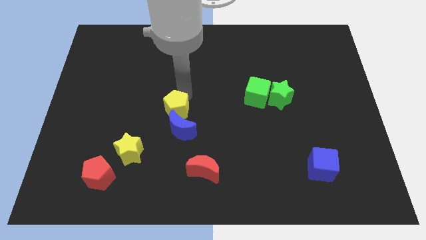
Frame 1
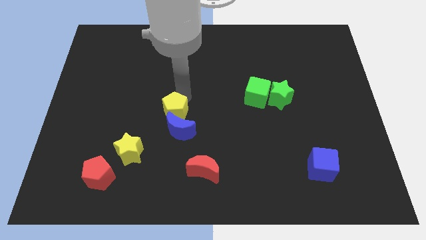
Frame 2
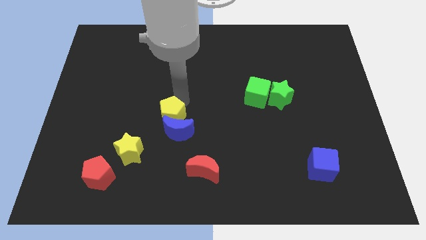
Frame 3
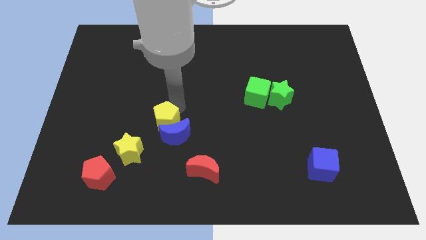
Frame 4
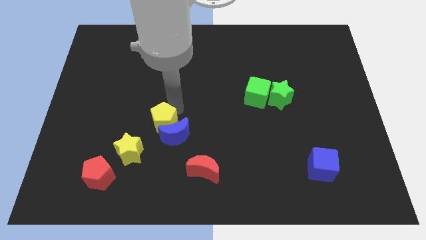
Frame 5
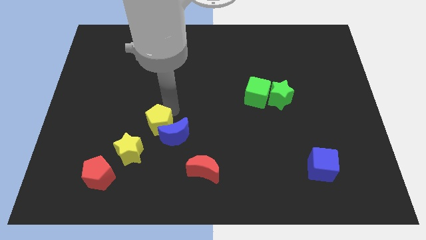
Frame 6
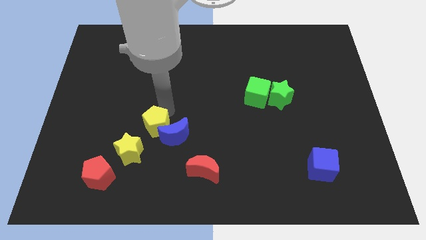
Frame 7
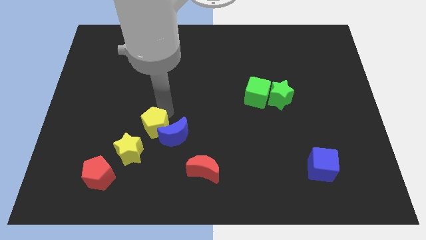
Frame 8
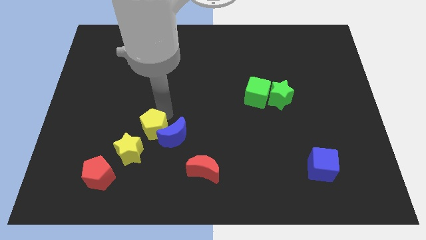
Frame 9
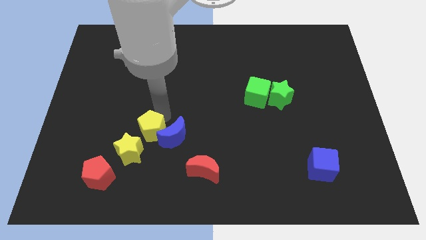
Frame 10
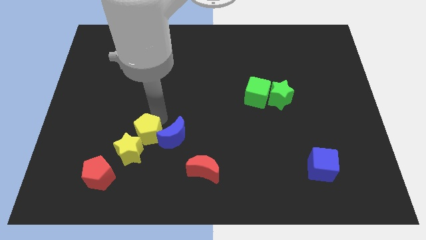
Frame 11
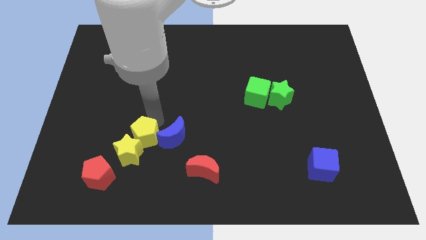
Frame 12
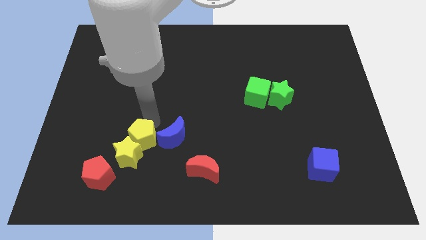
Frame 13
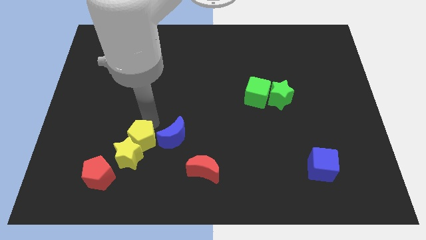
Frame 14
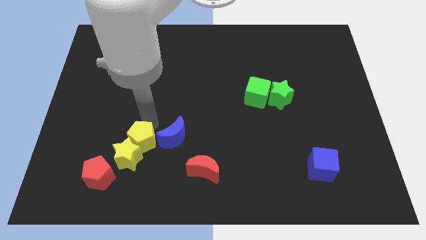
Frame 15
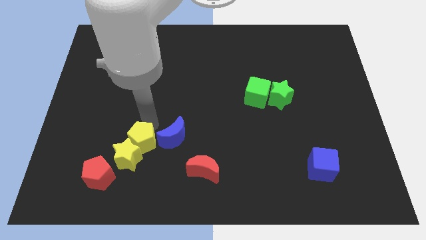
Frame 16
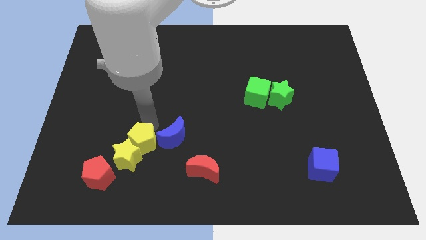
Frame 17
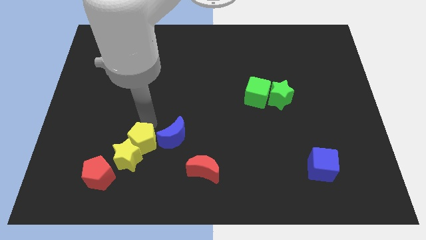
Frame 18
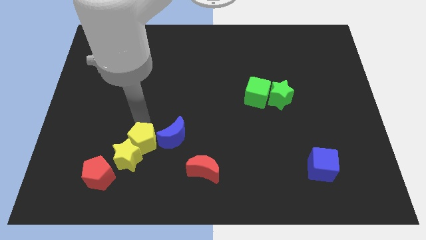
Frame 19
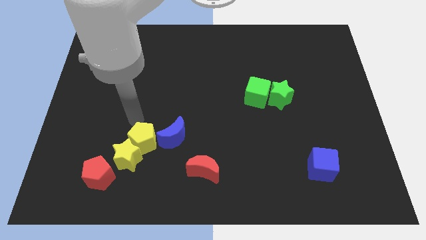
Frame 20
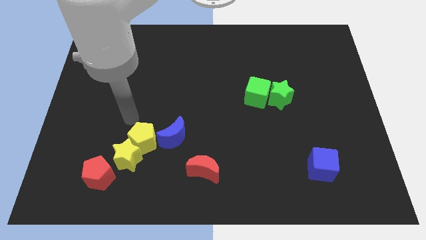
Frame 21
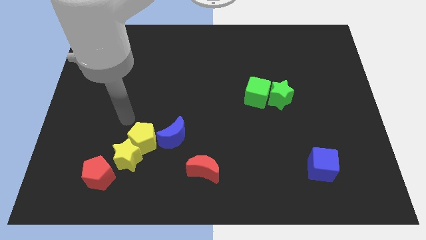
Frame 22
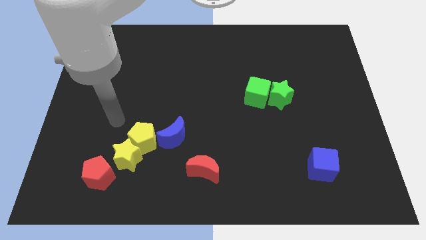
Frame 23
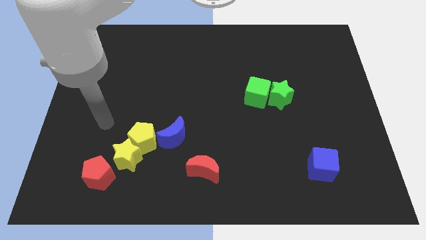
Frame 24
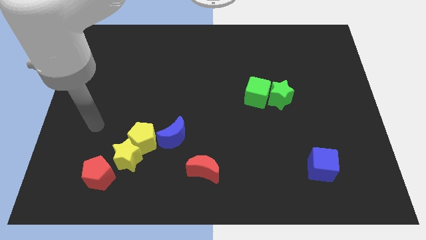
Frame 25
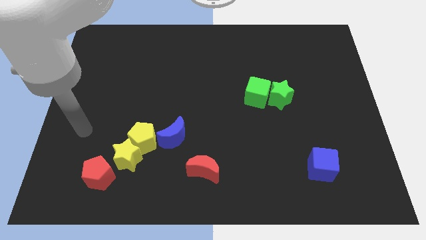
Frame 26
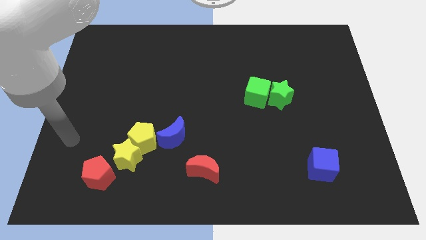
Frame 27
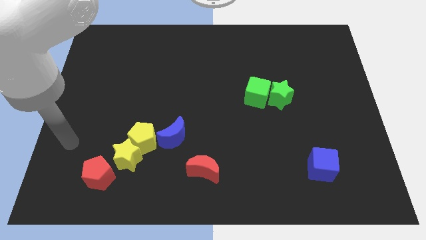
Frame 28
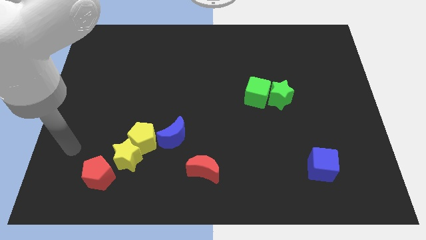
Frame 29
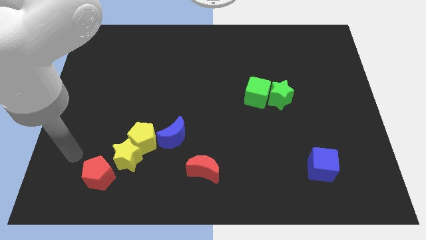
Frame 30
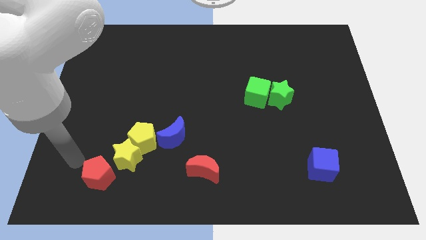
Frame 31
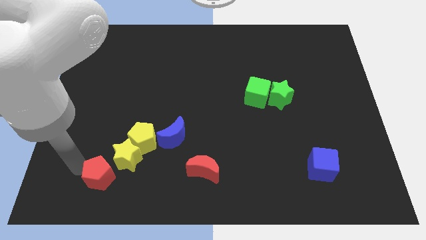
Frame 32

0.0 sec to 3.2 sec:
push the yellow pentagon into the yellow star

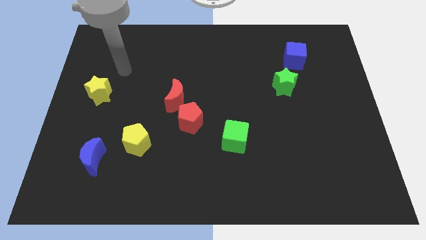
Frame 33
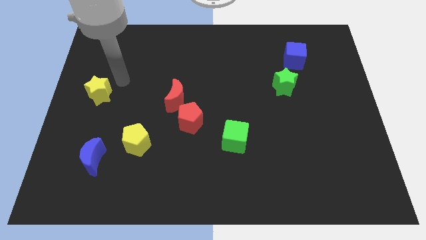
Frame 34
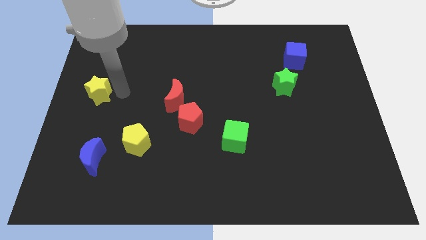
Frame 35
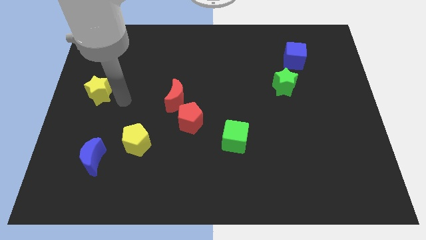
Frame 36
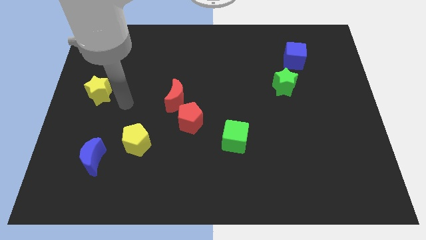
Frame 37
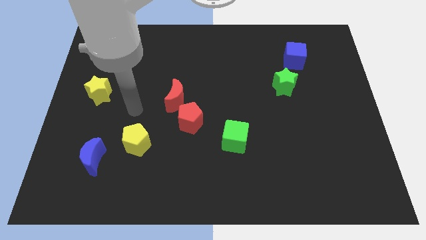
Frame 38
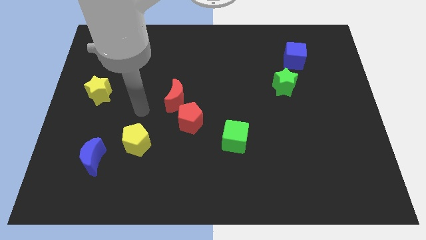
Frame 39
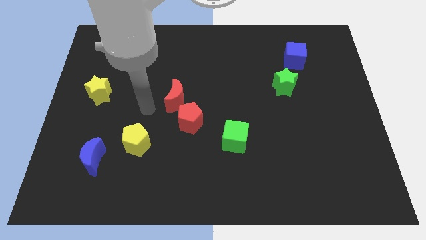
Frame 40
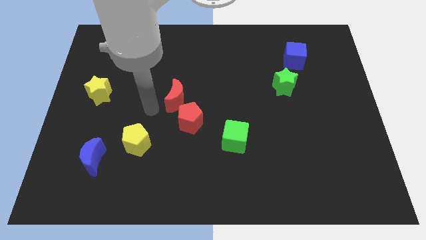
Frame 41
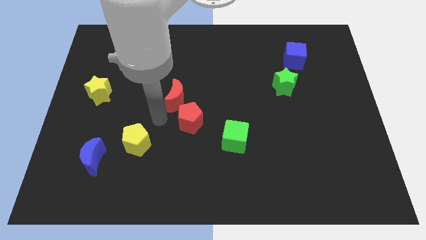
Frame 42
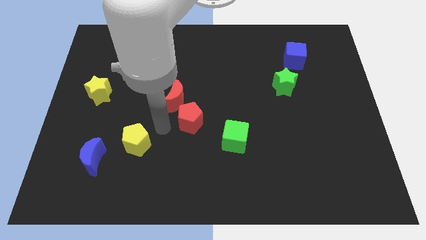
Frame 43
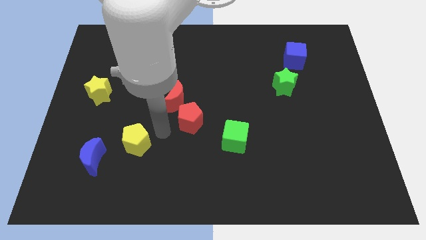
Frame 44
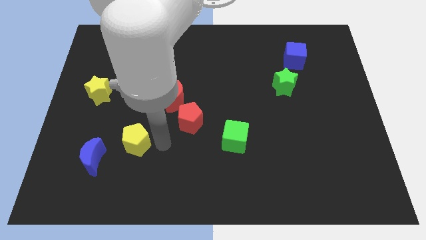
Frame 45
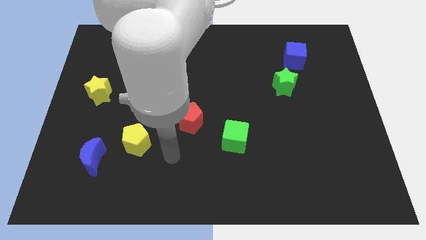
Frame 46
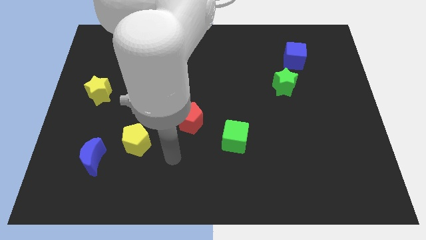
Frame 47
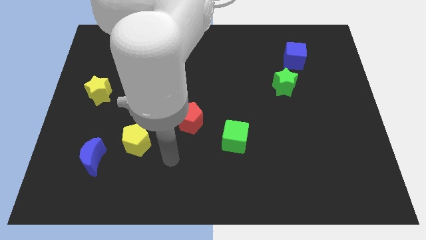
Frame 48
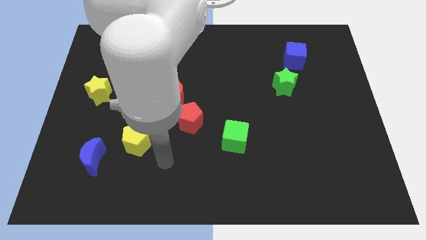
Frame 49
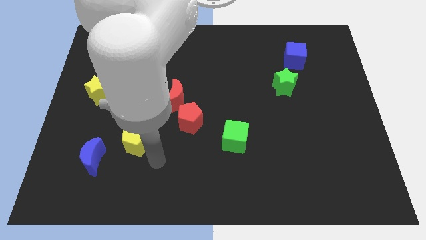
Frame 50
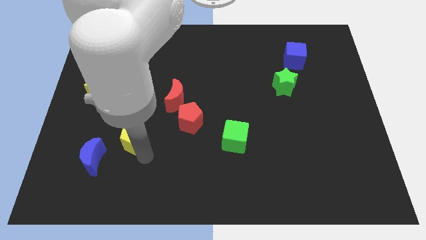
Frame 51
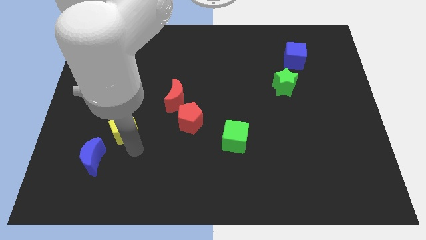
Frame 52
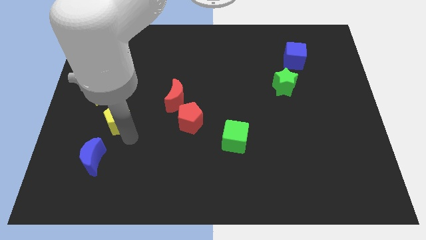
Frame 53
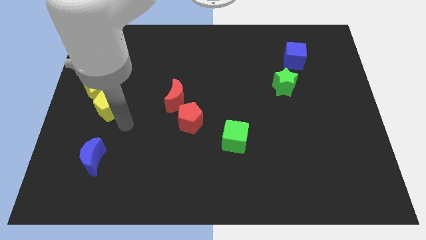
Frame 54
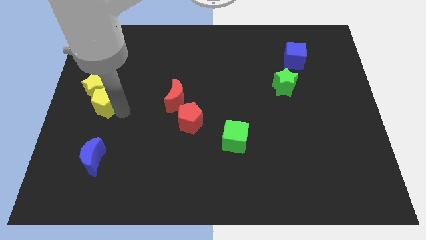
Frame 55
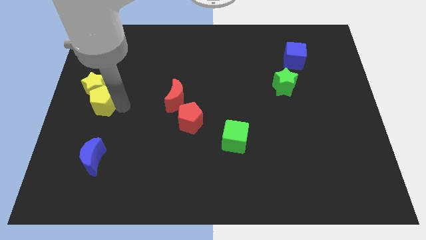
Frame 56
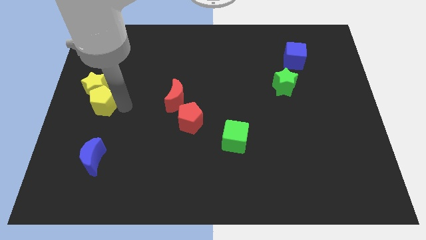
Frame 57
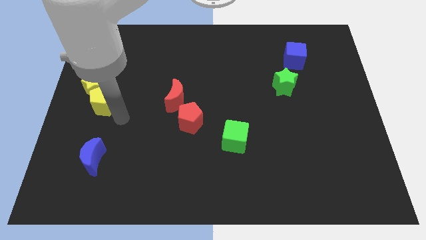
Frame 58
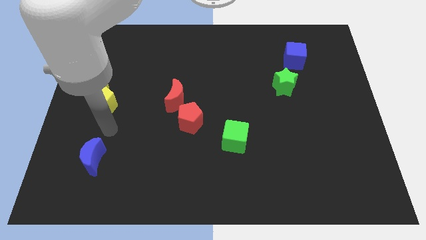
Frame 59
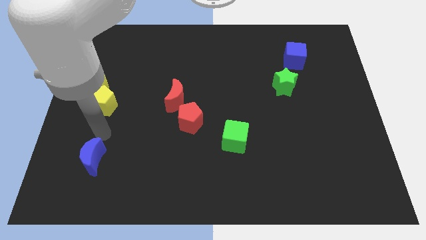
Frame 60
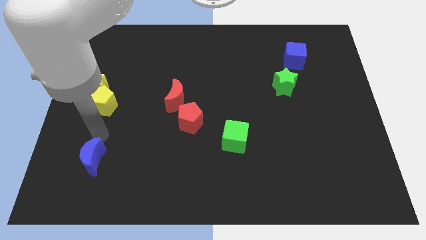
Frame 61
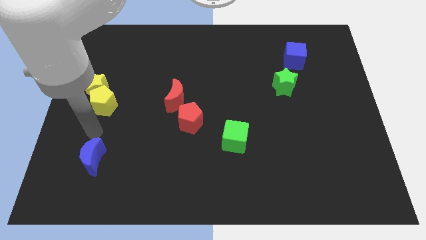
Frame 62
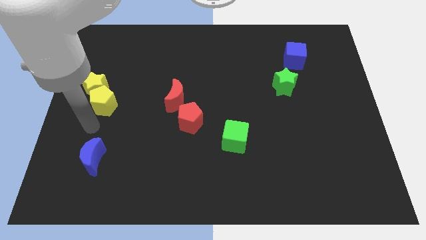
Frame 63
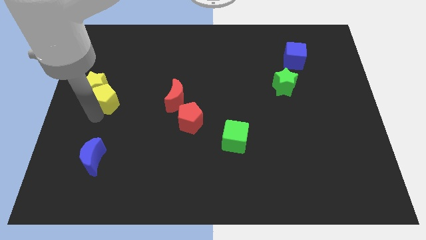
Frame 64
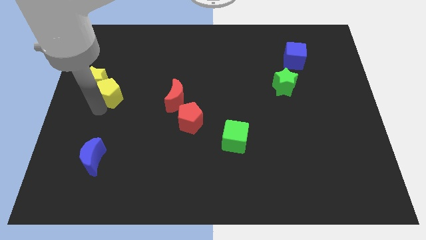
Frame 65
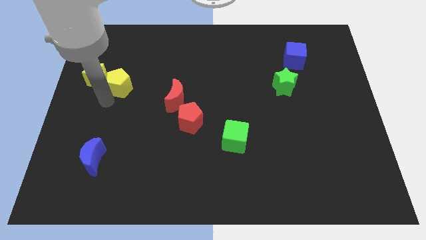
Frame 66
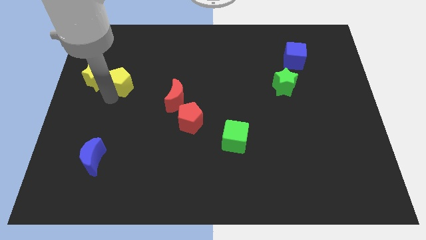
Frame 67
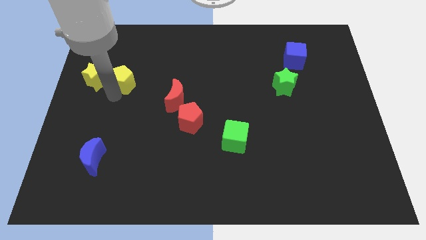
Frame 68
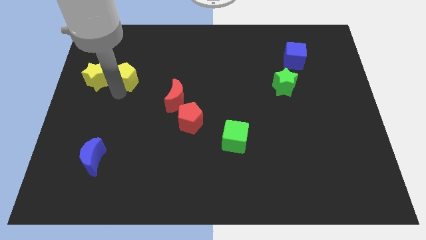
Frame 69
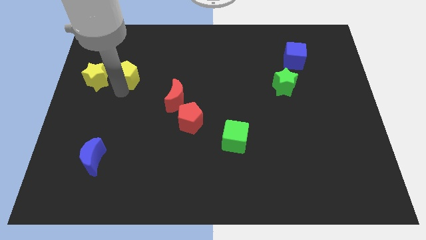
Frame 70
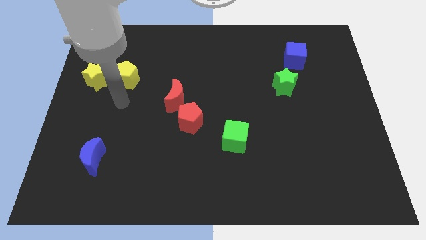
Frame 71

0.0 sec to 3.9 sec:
move the yellow pentagon close to the right side of the yellow star

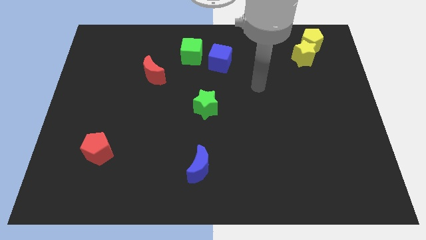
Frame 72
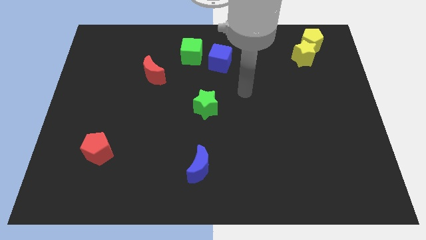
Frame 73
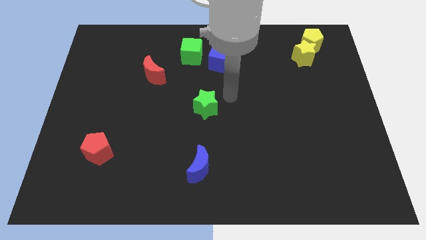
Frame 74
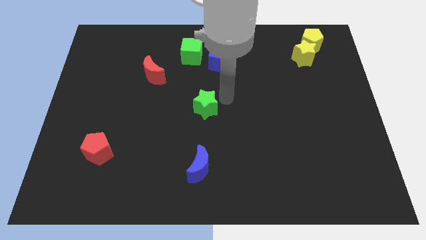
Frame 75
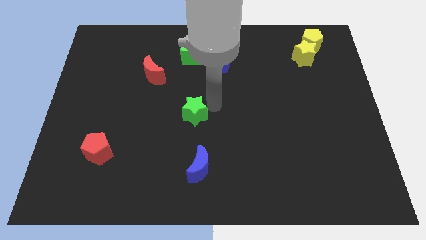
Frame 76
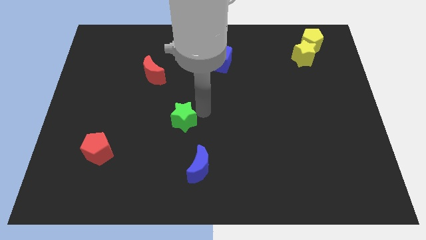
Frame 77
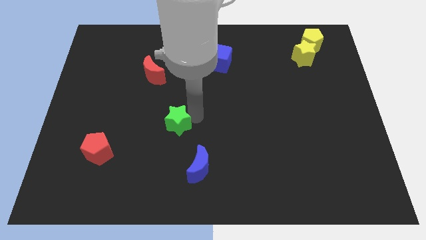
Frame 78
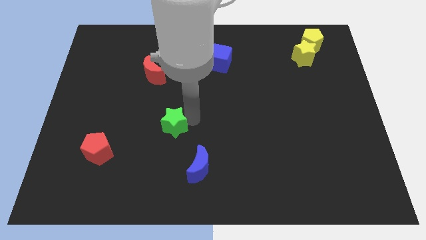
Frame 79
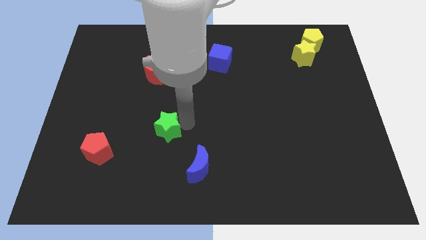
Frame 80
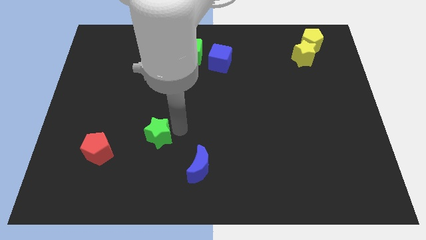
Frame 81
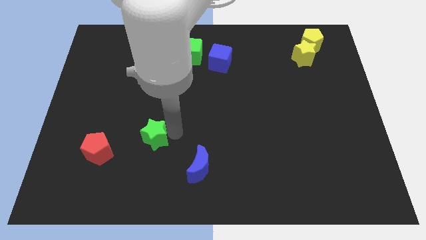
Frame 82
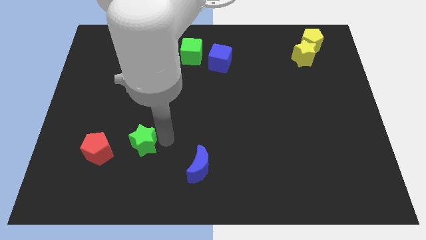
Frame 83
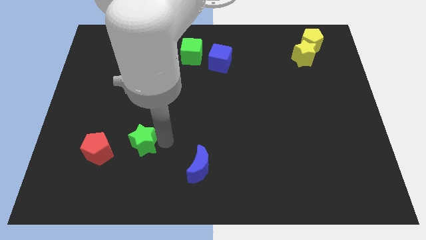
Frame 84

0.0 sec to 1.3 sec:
move green star towards red pentagon

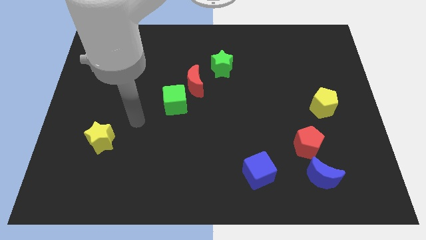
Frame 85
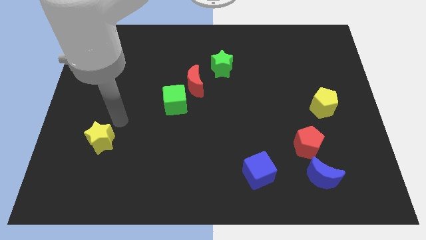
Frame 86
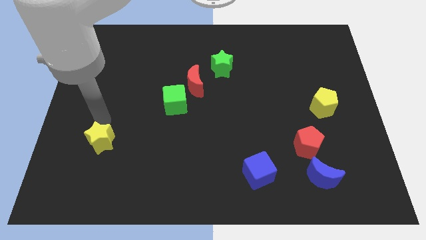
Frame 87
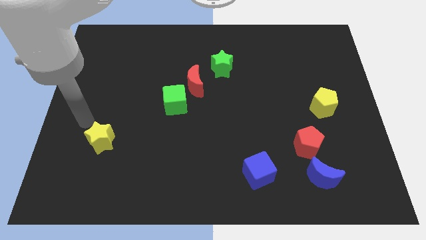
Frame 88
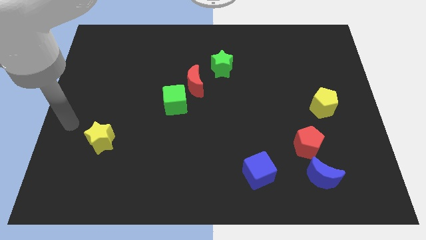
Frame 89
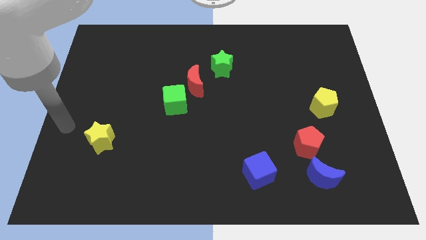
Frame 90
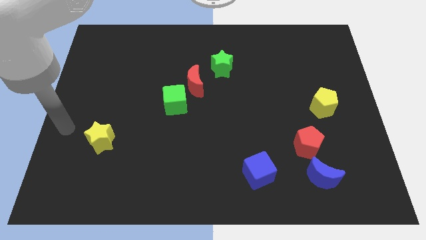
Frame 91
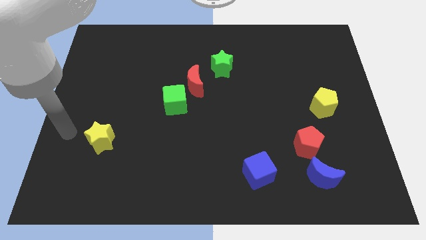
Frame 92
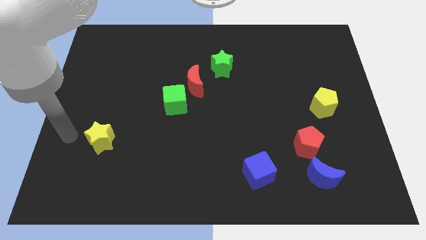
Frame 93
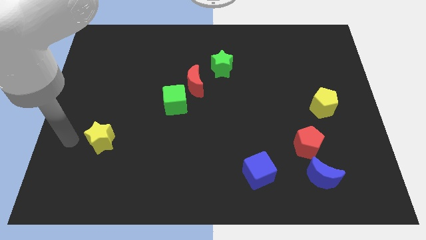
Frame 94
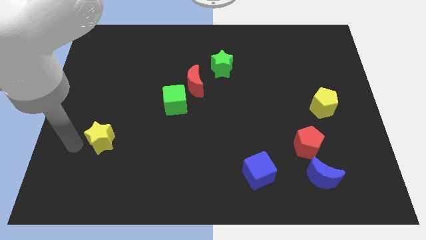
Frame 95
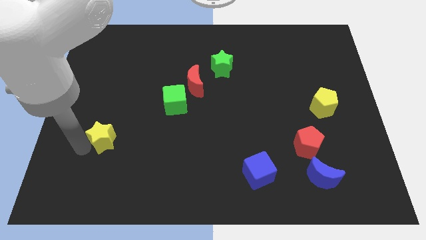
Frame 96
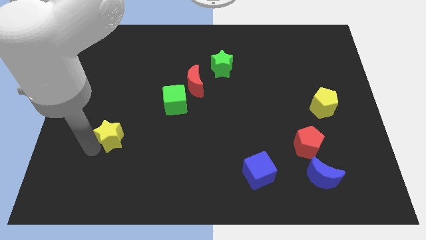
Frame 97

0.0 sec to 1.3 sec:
move the yellow star slightly to the right
